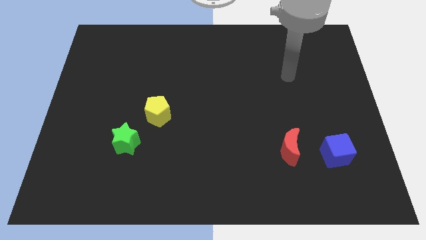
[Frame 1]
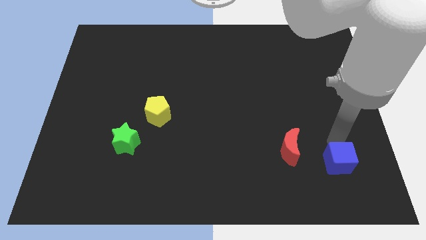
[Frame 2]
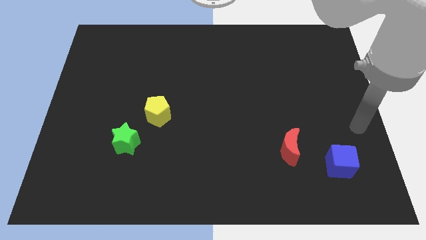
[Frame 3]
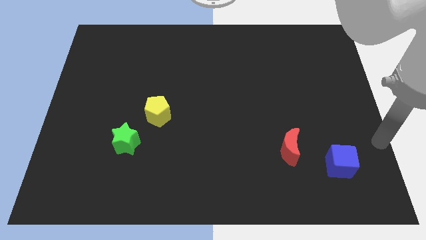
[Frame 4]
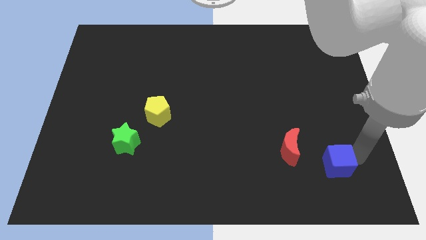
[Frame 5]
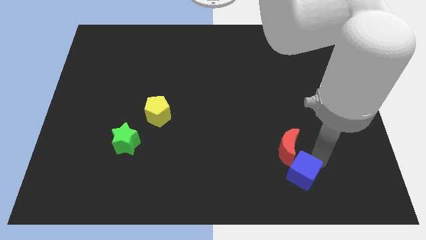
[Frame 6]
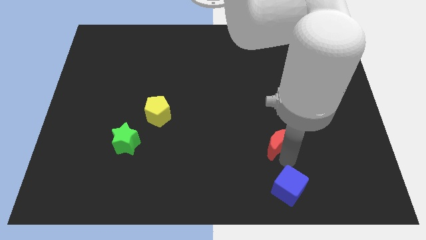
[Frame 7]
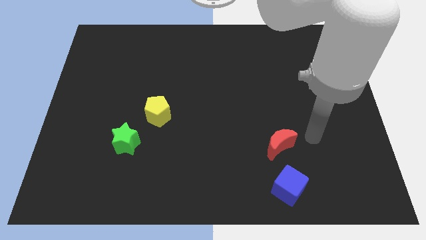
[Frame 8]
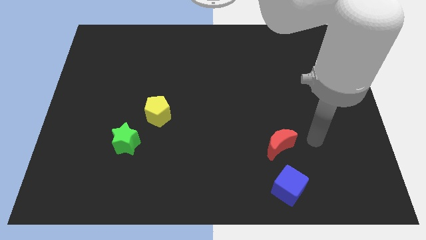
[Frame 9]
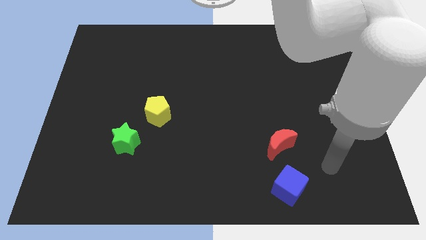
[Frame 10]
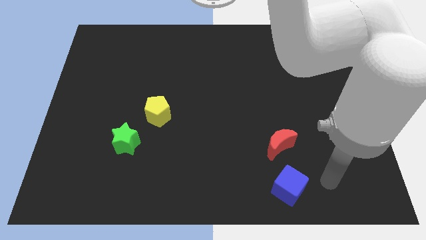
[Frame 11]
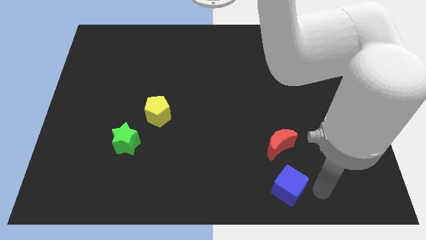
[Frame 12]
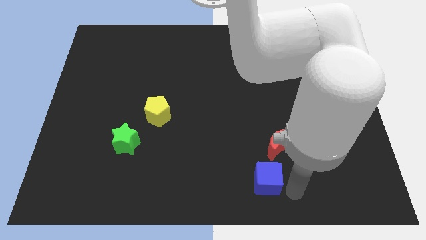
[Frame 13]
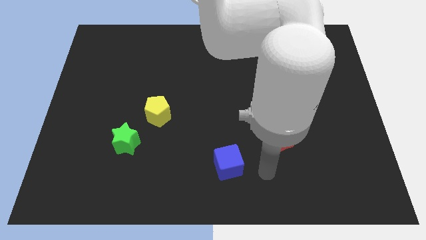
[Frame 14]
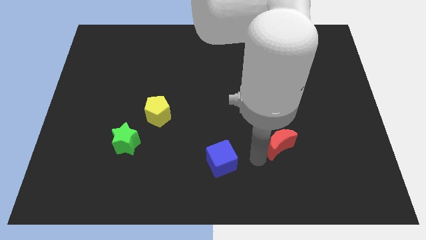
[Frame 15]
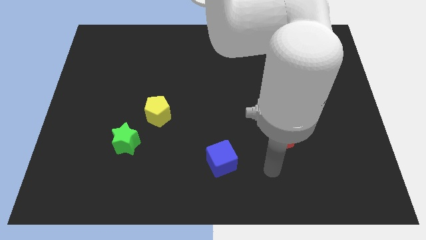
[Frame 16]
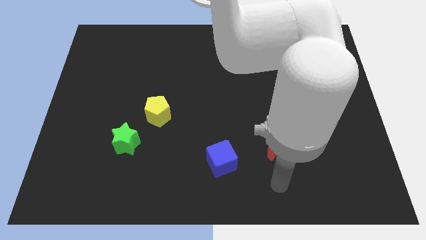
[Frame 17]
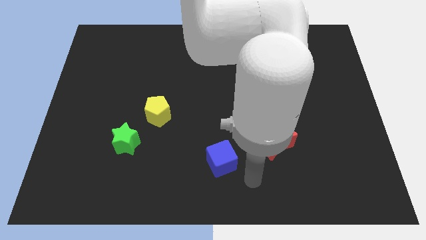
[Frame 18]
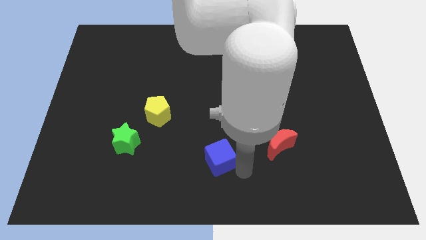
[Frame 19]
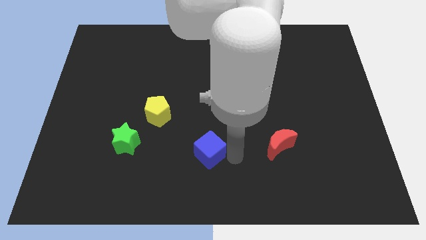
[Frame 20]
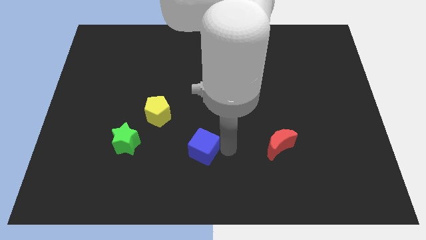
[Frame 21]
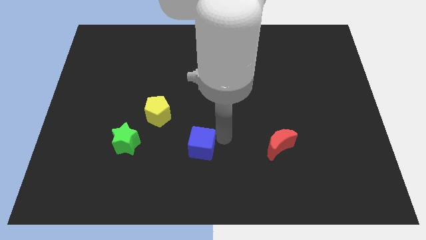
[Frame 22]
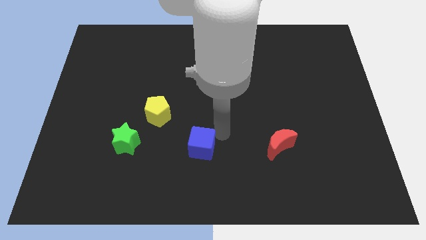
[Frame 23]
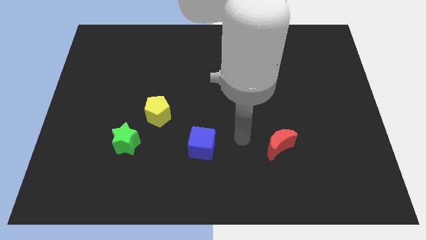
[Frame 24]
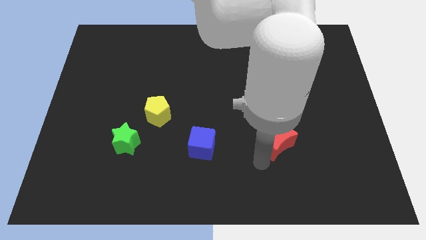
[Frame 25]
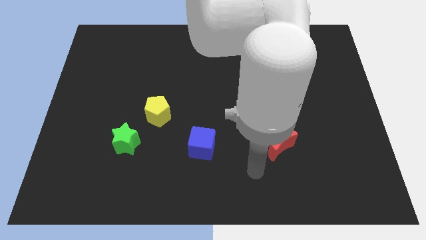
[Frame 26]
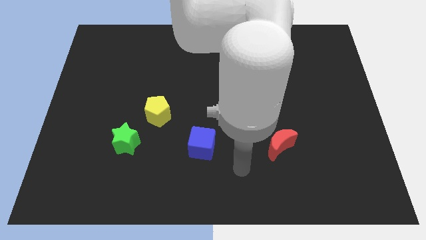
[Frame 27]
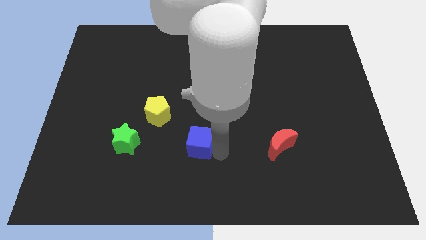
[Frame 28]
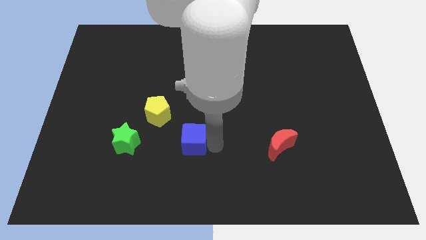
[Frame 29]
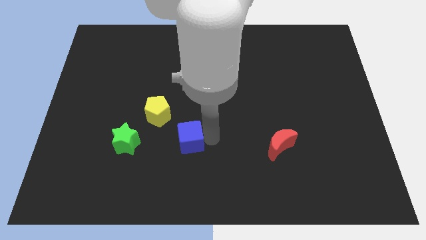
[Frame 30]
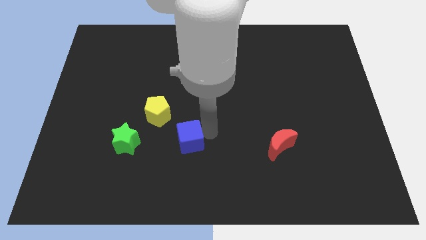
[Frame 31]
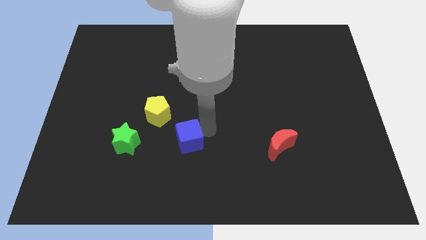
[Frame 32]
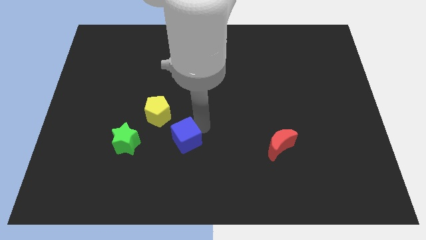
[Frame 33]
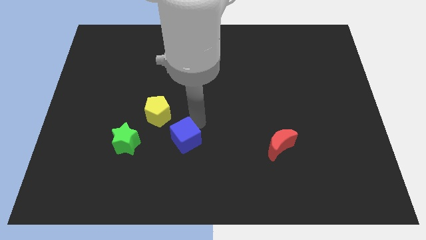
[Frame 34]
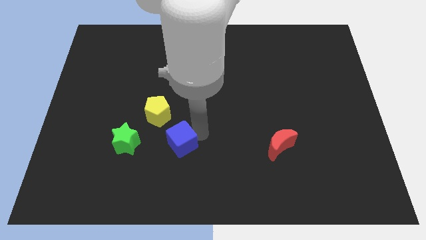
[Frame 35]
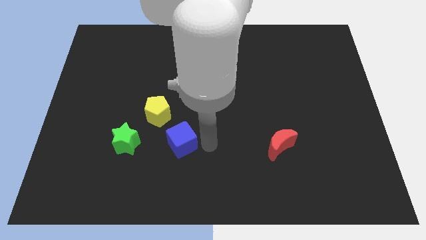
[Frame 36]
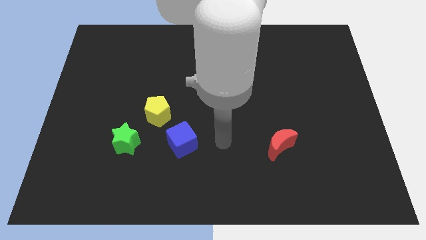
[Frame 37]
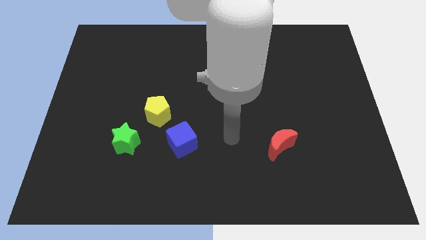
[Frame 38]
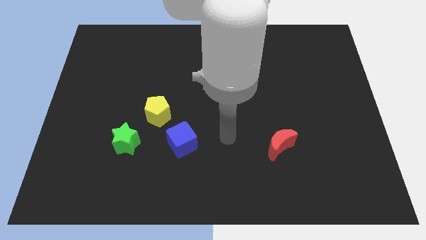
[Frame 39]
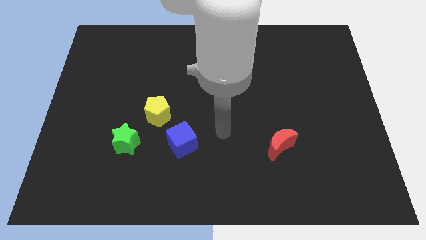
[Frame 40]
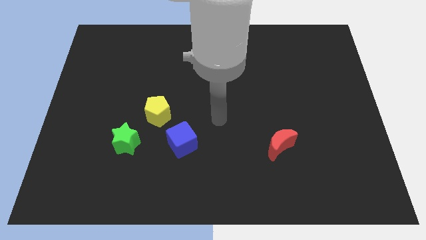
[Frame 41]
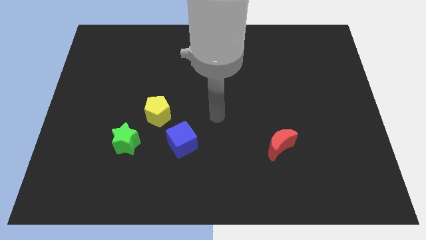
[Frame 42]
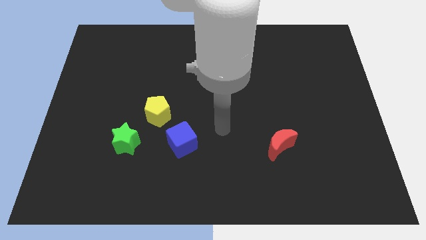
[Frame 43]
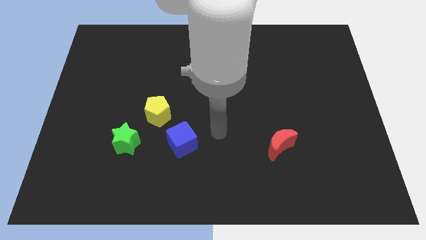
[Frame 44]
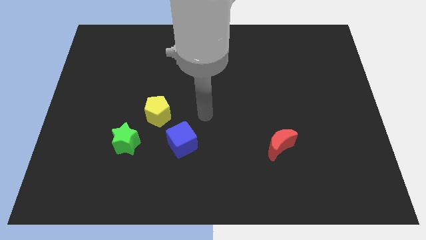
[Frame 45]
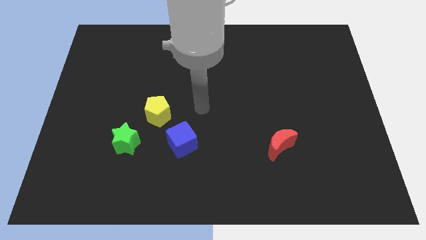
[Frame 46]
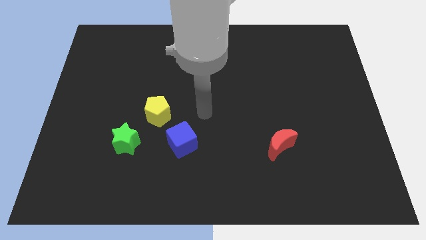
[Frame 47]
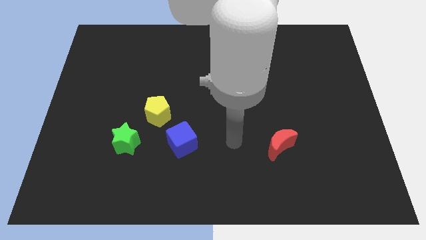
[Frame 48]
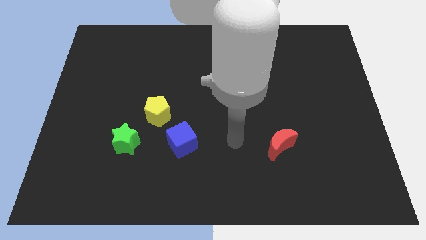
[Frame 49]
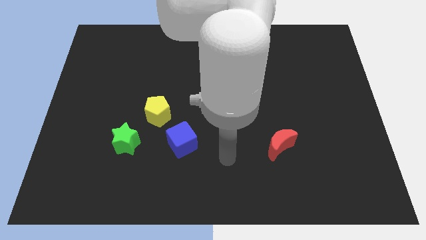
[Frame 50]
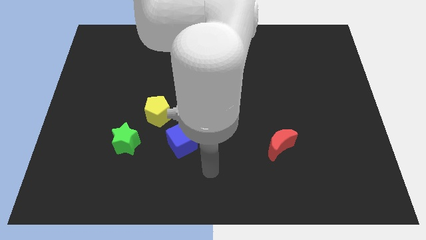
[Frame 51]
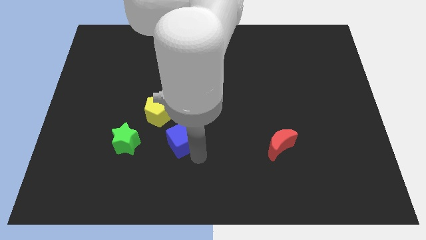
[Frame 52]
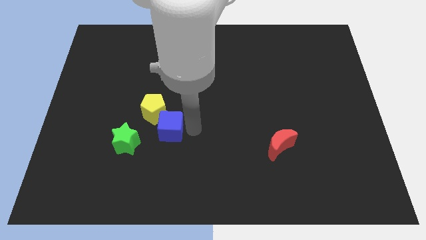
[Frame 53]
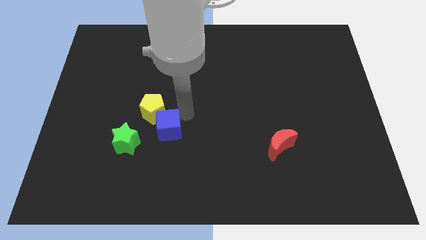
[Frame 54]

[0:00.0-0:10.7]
push the cube towards the yellow block

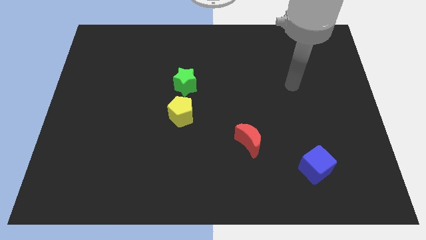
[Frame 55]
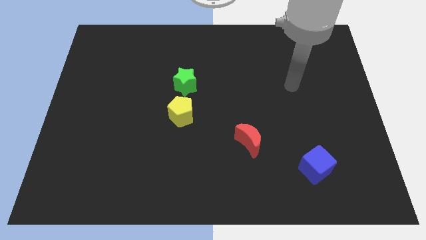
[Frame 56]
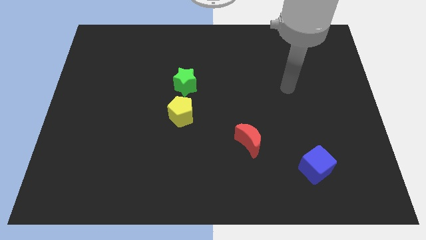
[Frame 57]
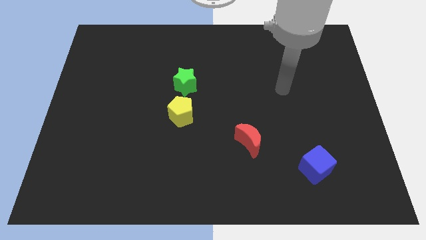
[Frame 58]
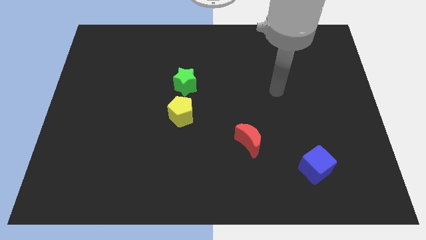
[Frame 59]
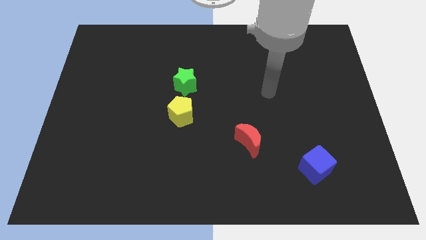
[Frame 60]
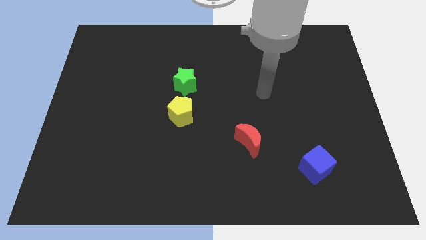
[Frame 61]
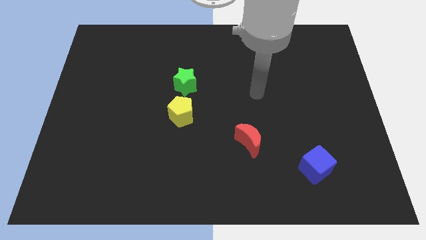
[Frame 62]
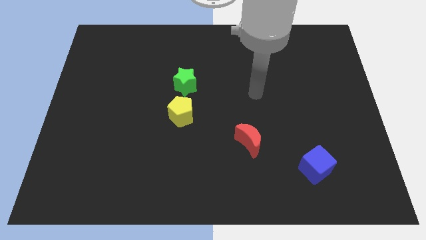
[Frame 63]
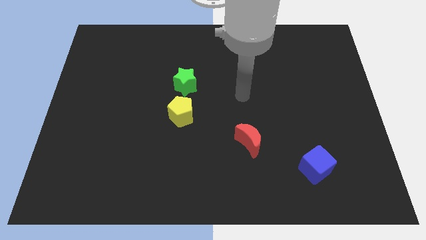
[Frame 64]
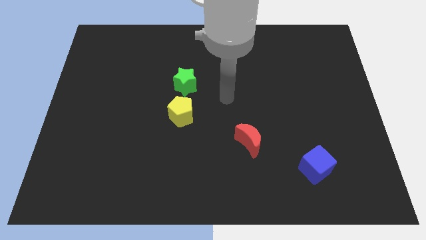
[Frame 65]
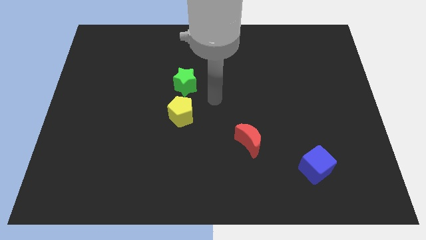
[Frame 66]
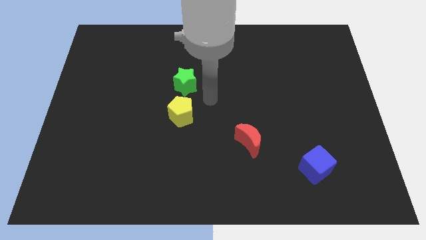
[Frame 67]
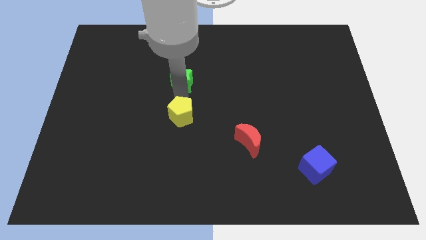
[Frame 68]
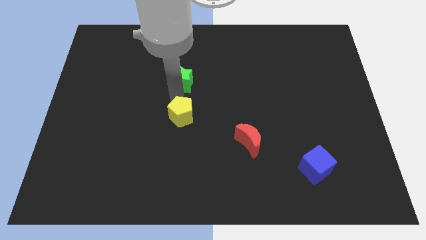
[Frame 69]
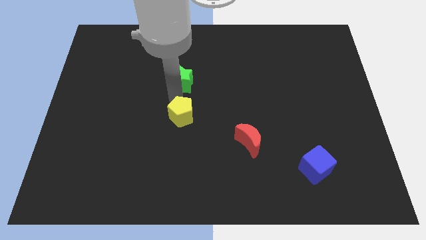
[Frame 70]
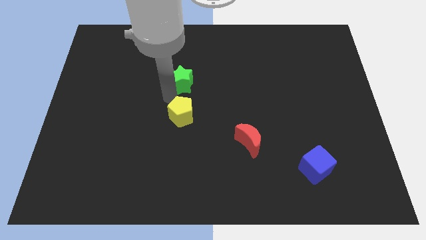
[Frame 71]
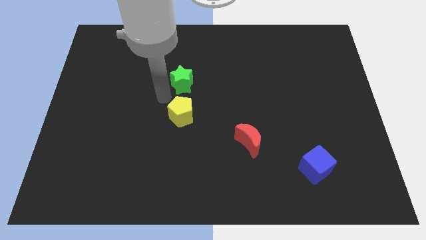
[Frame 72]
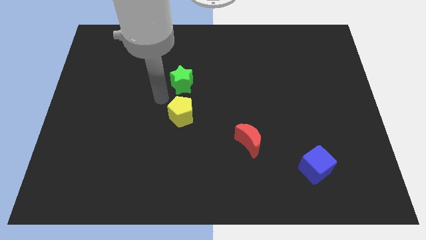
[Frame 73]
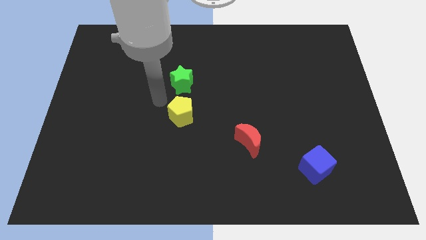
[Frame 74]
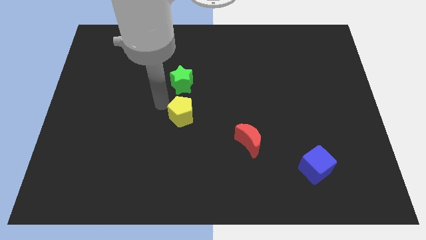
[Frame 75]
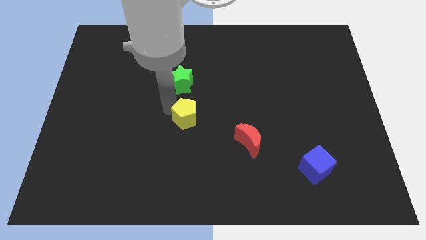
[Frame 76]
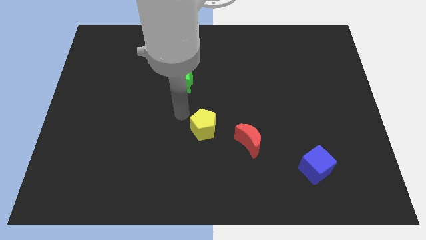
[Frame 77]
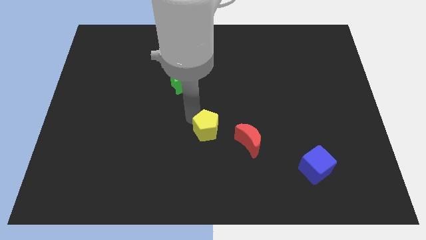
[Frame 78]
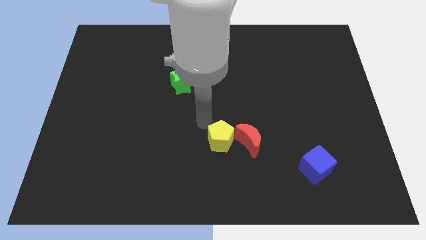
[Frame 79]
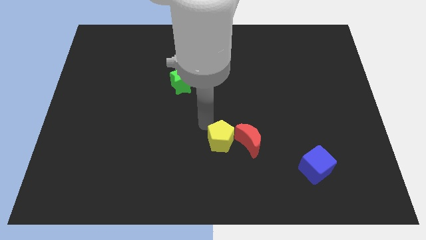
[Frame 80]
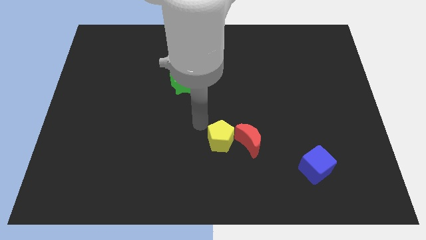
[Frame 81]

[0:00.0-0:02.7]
slide the yellow pentagon to the red moon

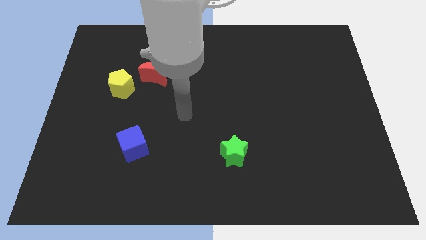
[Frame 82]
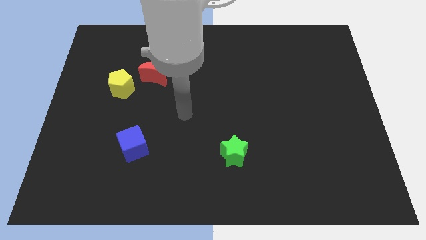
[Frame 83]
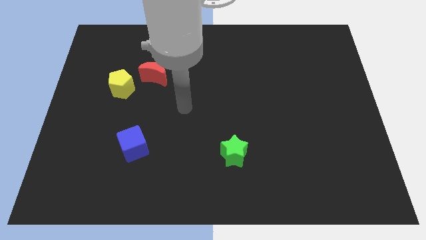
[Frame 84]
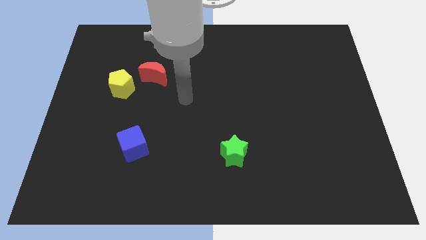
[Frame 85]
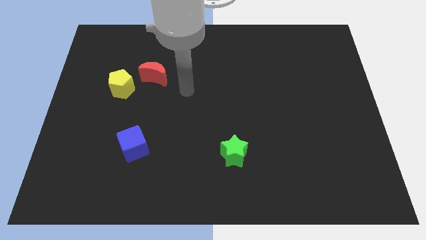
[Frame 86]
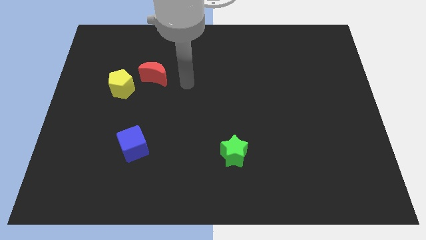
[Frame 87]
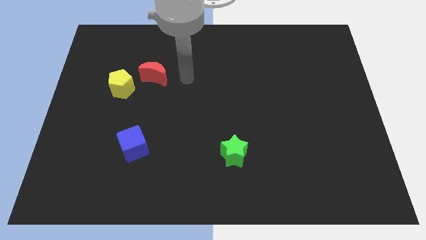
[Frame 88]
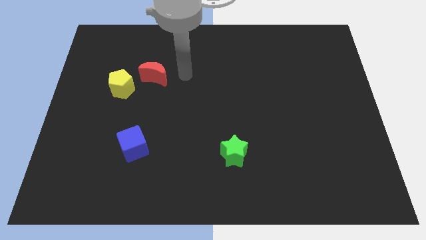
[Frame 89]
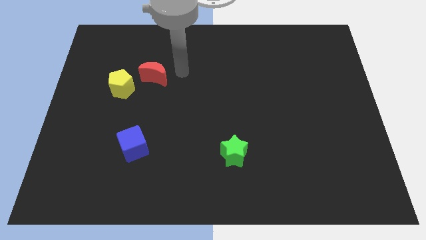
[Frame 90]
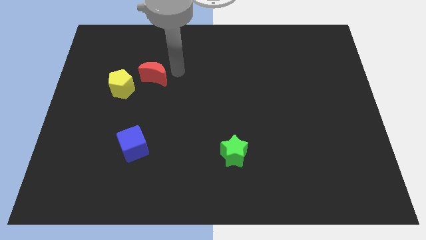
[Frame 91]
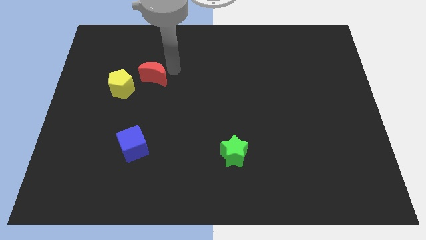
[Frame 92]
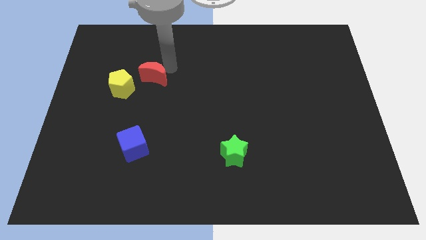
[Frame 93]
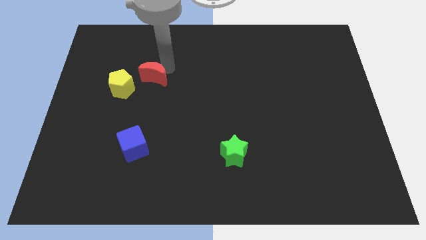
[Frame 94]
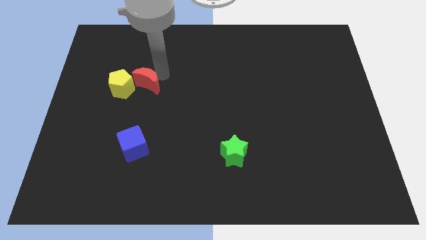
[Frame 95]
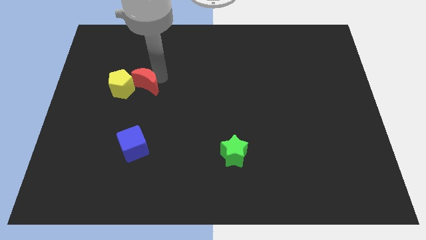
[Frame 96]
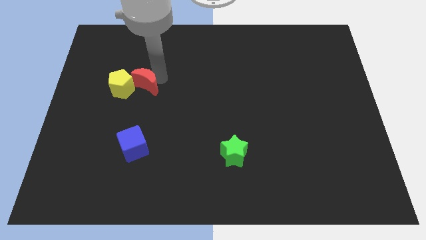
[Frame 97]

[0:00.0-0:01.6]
put the red moon next to the yellow block
